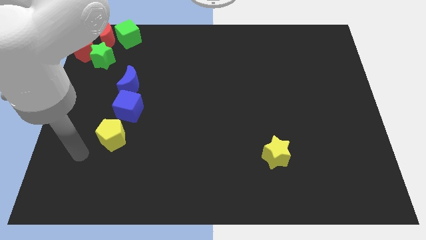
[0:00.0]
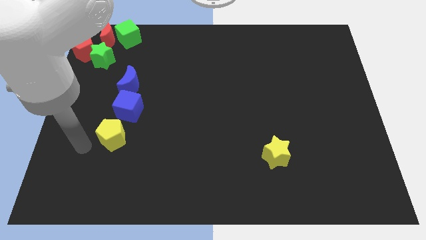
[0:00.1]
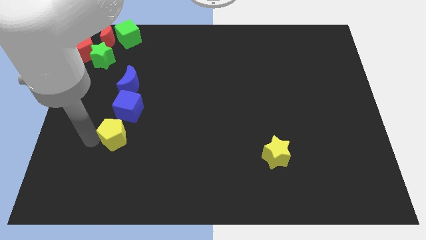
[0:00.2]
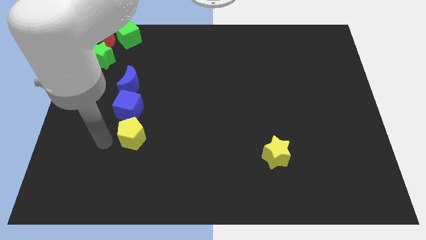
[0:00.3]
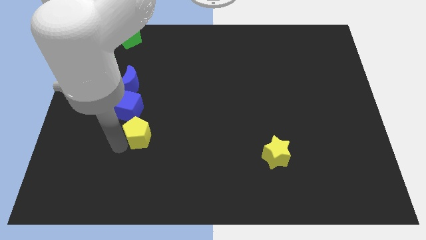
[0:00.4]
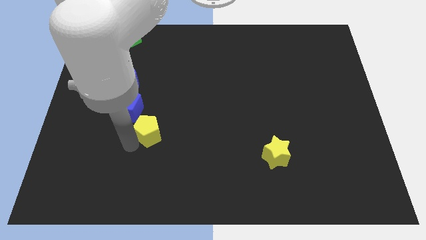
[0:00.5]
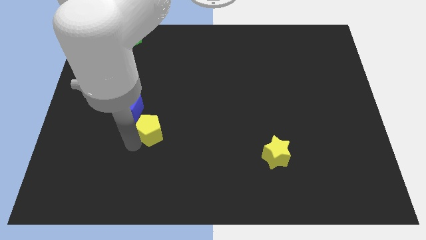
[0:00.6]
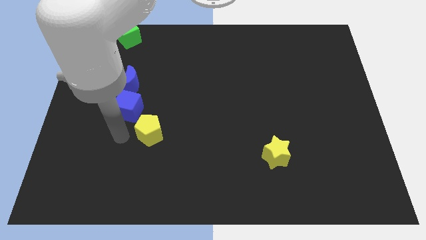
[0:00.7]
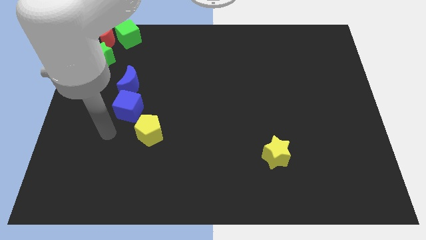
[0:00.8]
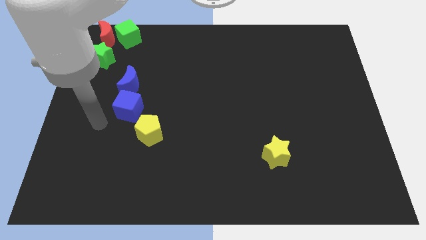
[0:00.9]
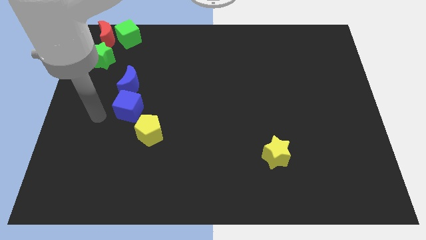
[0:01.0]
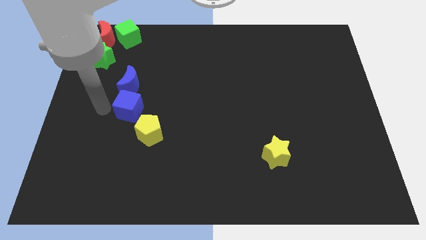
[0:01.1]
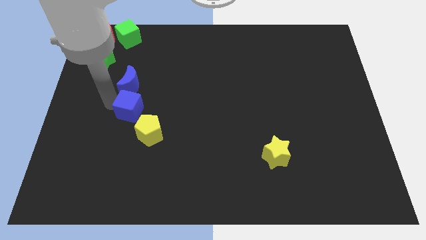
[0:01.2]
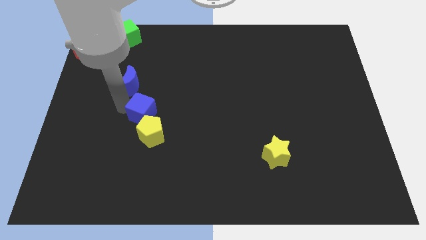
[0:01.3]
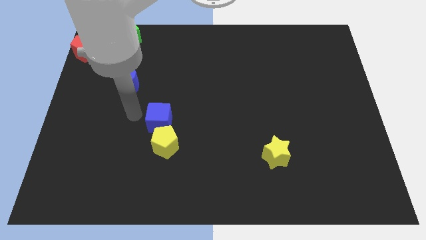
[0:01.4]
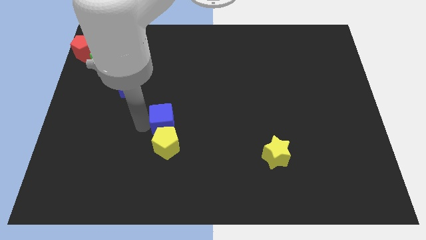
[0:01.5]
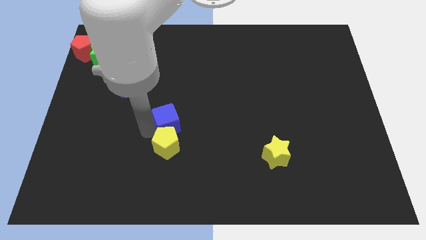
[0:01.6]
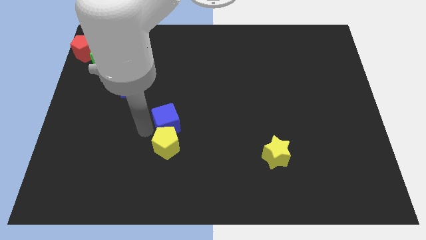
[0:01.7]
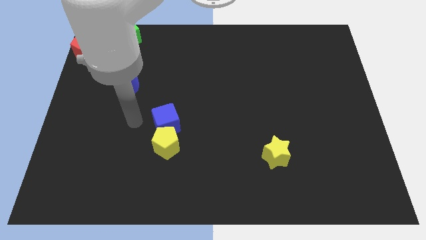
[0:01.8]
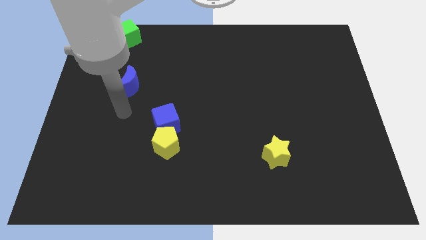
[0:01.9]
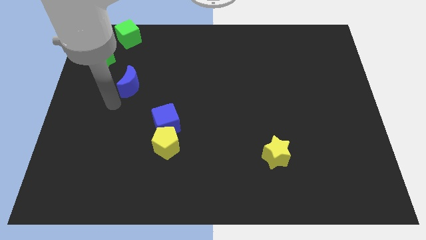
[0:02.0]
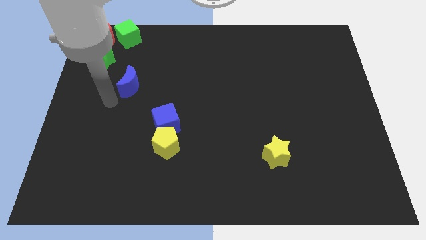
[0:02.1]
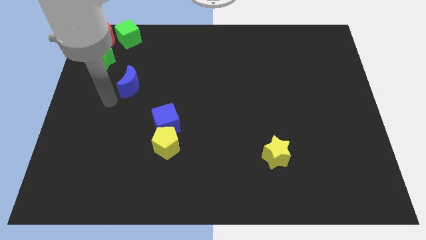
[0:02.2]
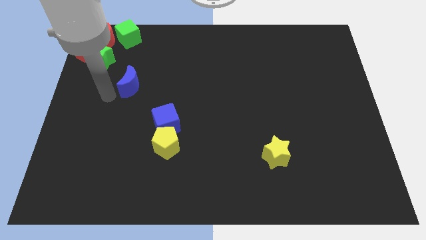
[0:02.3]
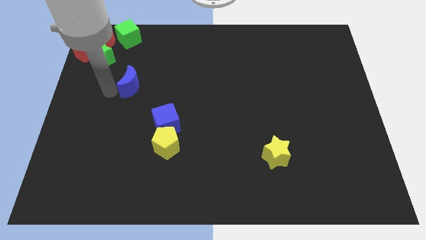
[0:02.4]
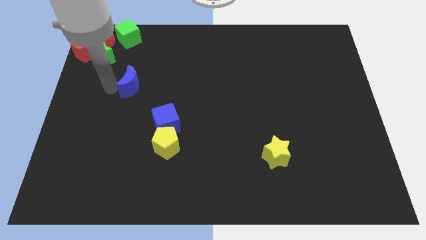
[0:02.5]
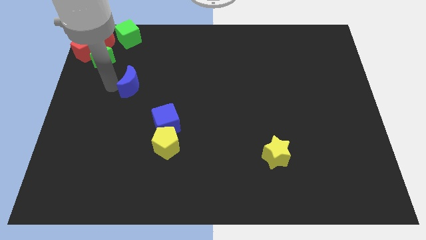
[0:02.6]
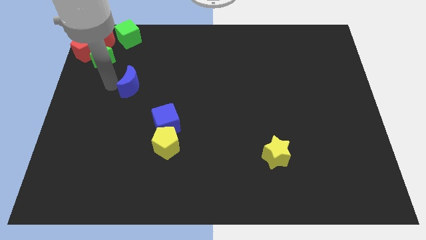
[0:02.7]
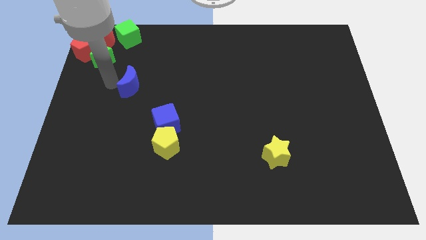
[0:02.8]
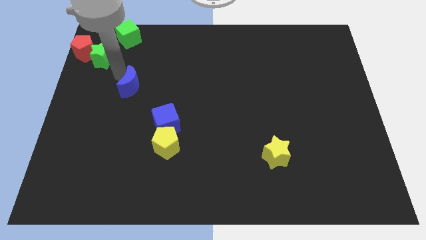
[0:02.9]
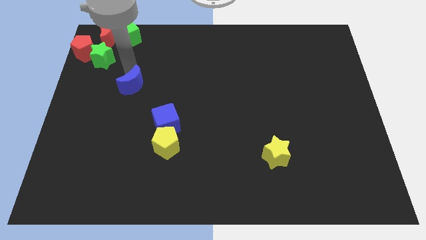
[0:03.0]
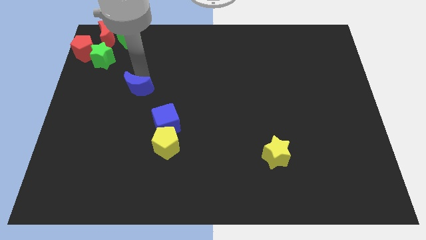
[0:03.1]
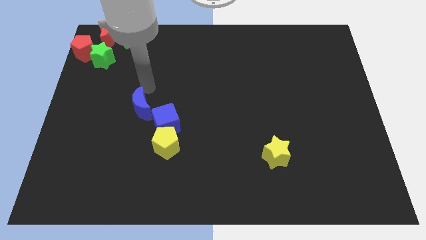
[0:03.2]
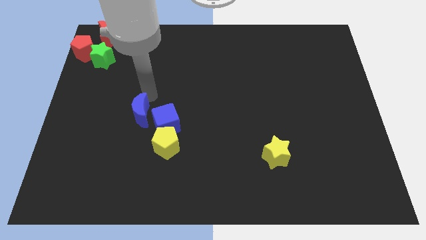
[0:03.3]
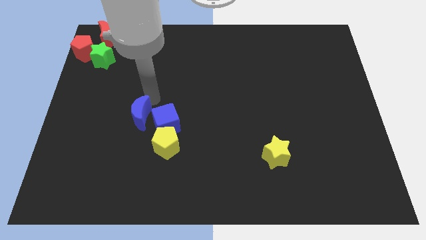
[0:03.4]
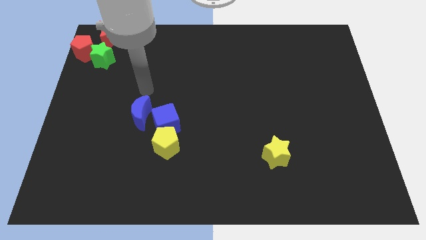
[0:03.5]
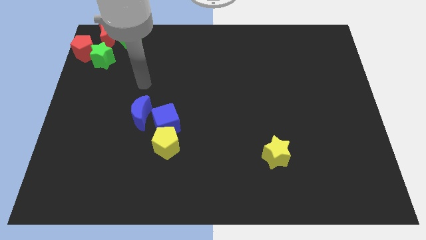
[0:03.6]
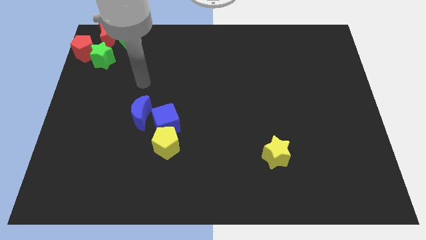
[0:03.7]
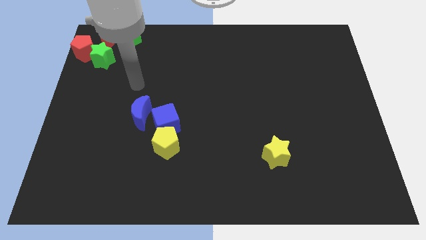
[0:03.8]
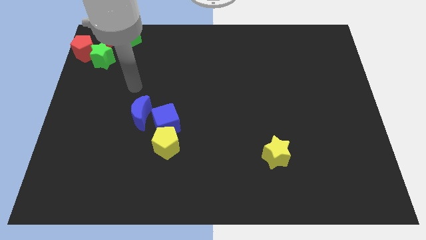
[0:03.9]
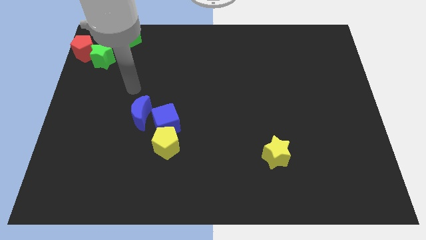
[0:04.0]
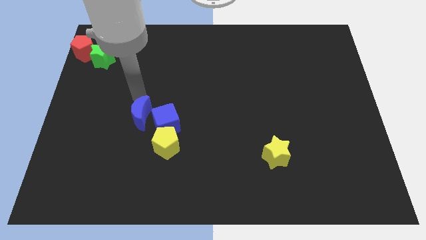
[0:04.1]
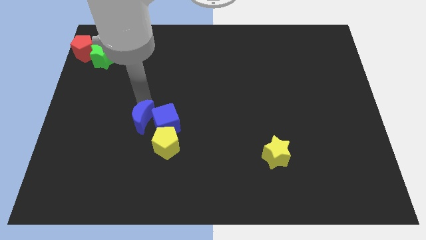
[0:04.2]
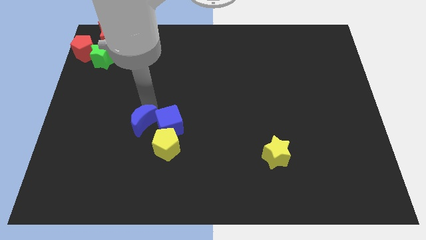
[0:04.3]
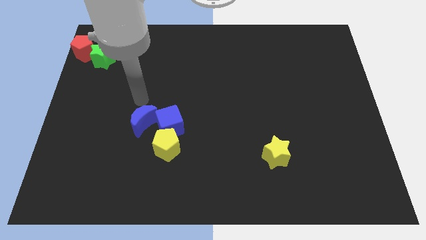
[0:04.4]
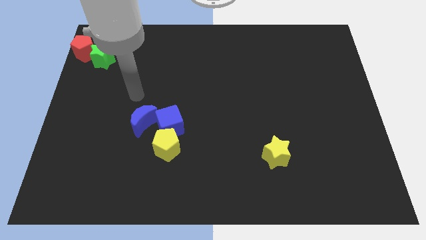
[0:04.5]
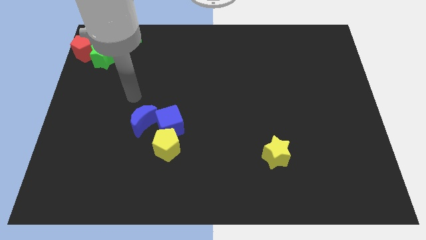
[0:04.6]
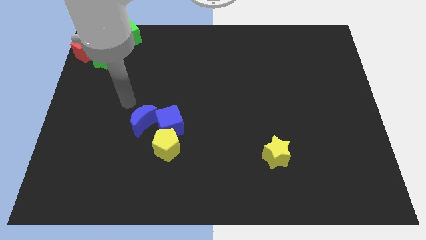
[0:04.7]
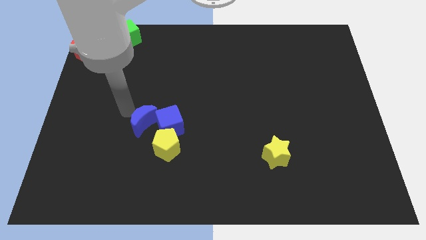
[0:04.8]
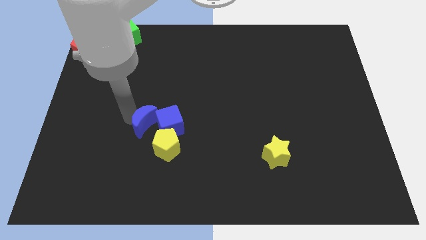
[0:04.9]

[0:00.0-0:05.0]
push group of blocks downward

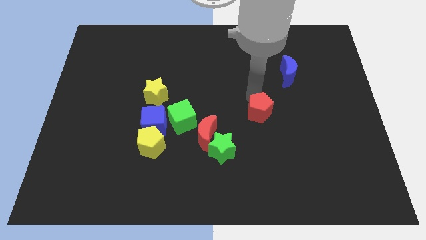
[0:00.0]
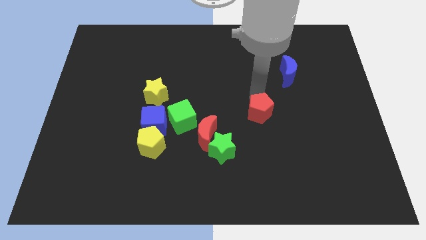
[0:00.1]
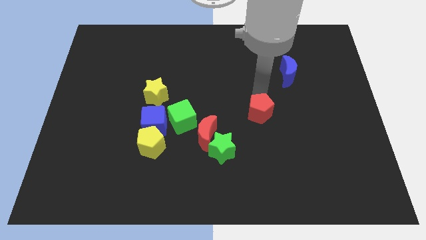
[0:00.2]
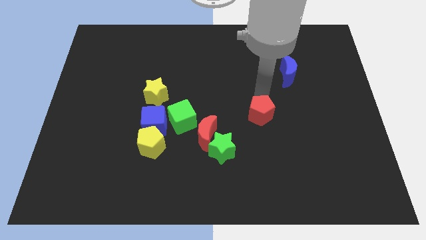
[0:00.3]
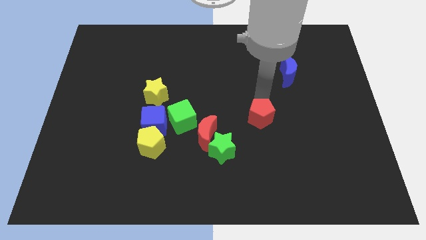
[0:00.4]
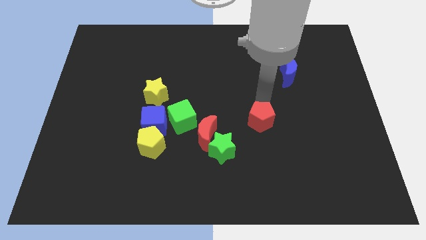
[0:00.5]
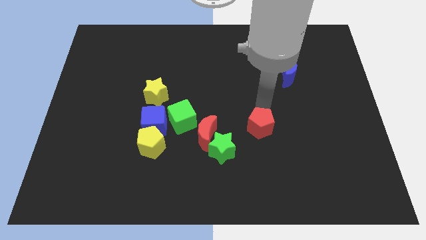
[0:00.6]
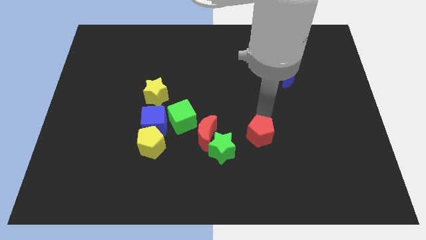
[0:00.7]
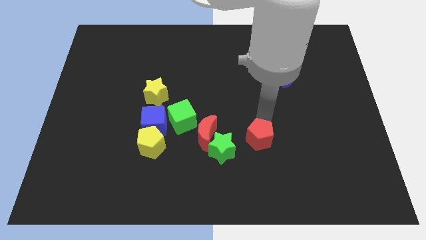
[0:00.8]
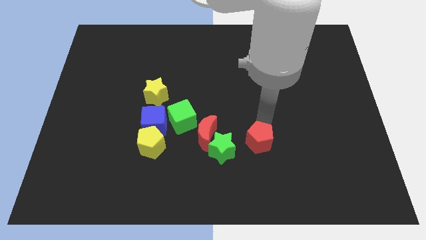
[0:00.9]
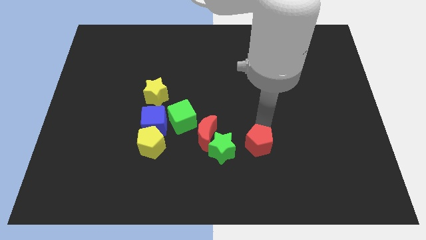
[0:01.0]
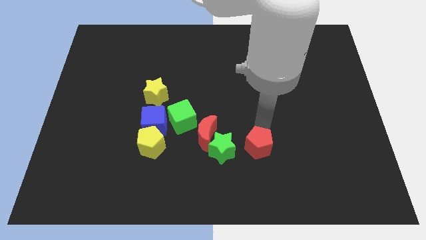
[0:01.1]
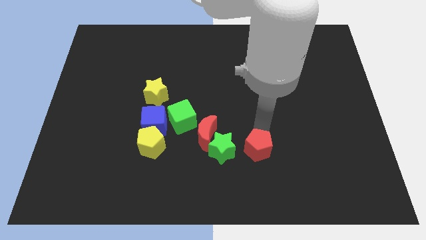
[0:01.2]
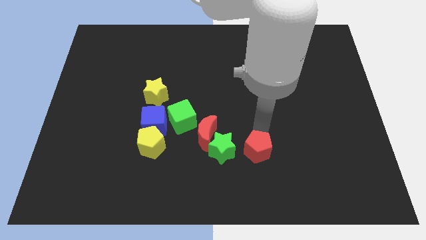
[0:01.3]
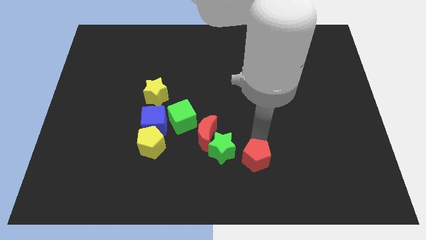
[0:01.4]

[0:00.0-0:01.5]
place the red pentagon parallel right to the green star

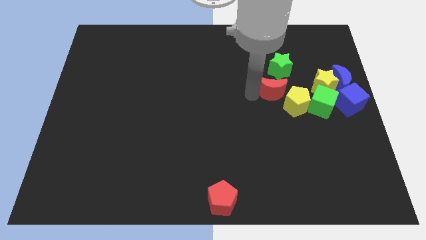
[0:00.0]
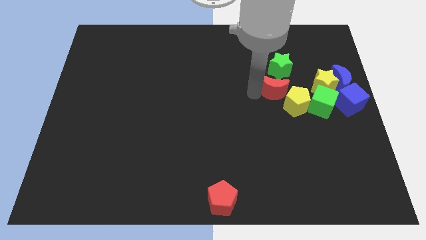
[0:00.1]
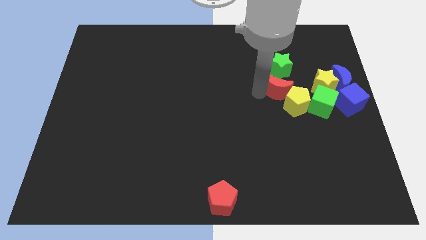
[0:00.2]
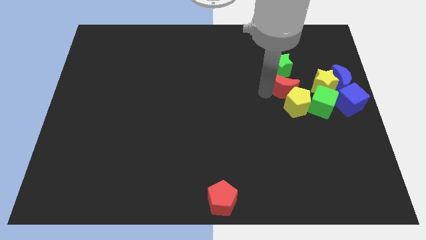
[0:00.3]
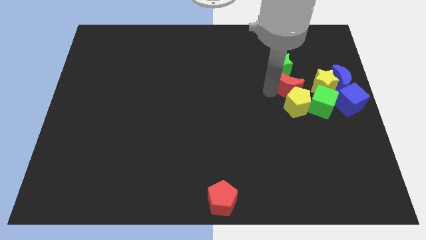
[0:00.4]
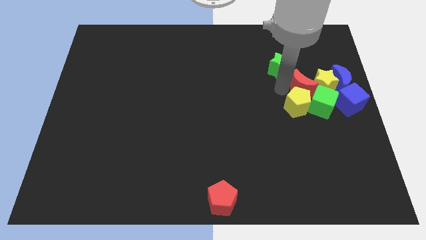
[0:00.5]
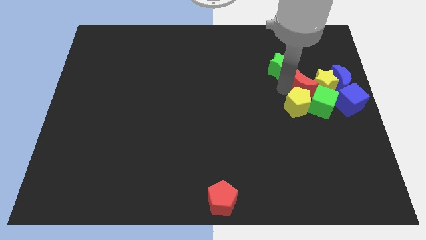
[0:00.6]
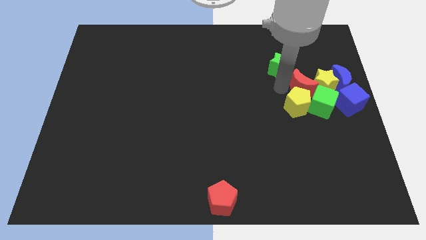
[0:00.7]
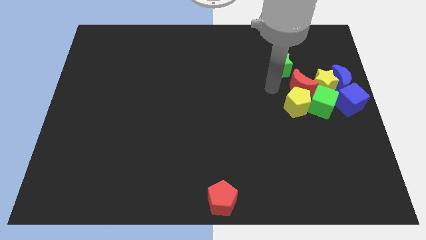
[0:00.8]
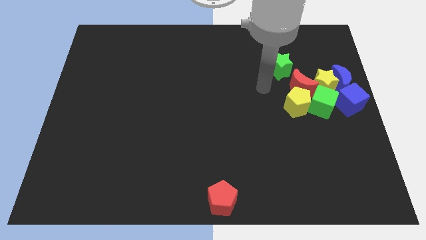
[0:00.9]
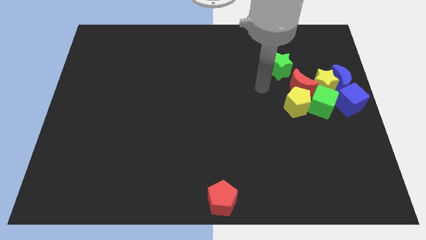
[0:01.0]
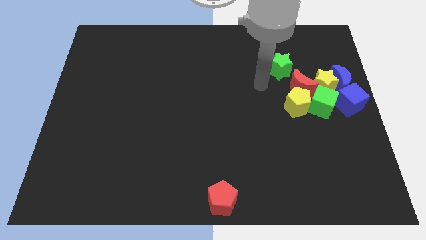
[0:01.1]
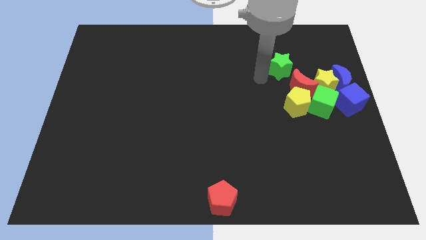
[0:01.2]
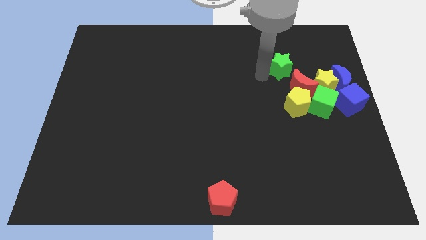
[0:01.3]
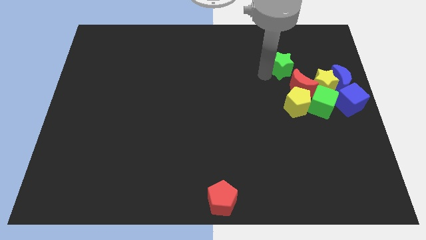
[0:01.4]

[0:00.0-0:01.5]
move the red crescent to the left side of the yellow star

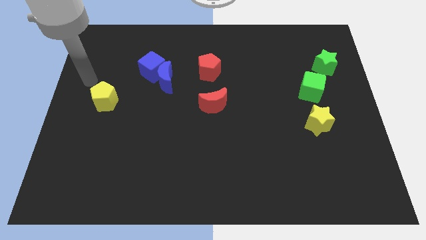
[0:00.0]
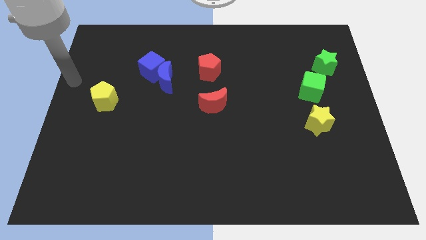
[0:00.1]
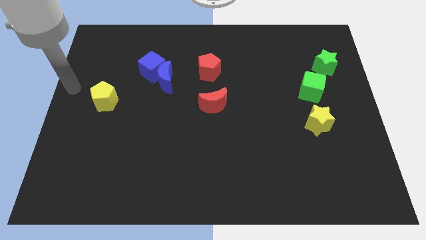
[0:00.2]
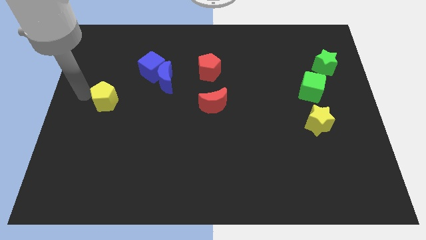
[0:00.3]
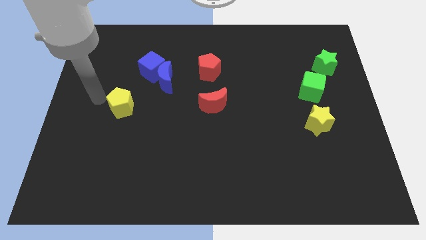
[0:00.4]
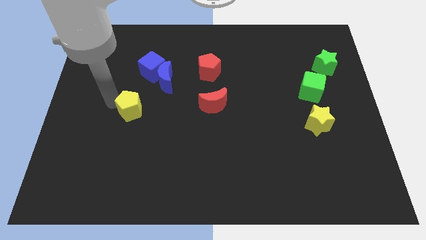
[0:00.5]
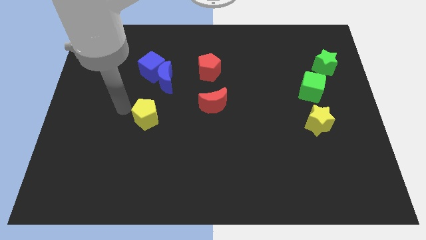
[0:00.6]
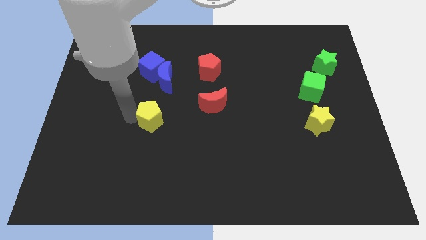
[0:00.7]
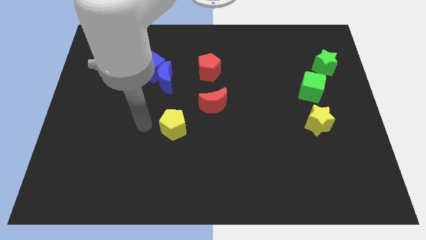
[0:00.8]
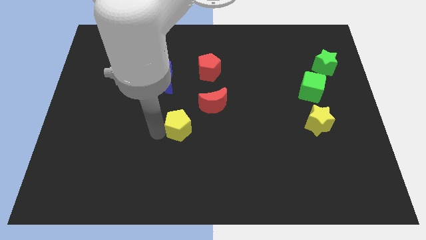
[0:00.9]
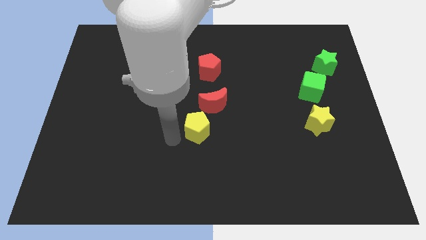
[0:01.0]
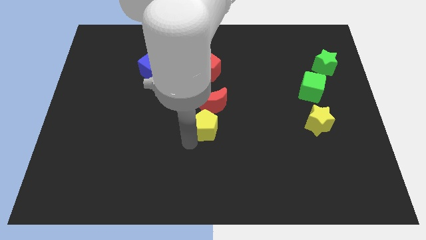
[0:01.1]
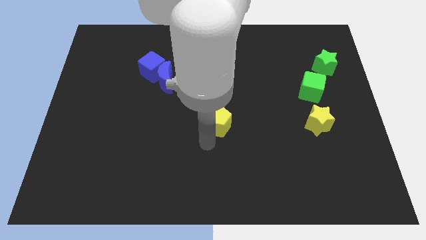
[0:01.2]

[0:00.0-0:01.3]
push the yellow pentagon to the bottom side of the red crescent
